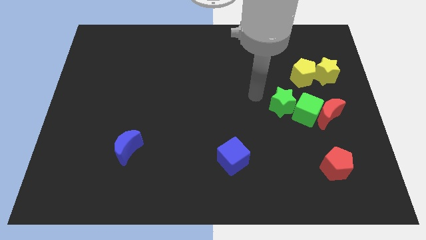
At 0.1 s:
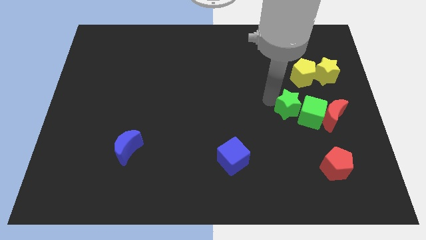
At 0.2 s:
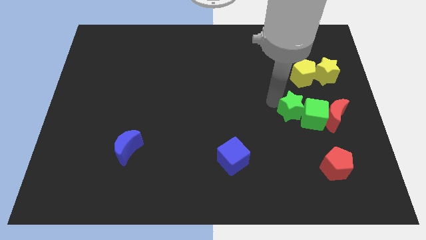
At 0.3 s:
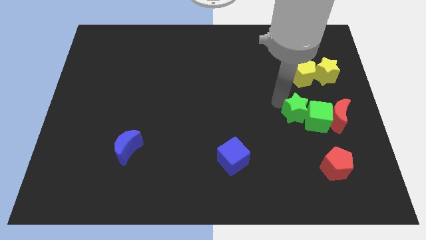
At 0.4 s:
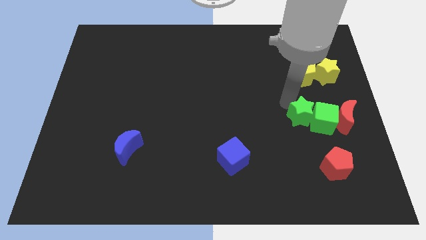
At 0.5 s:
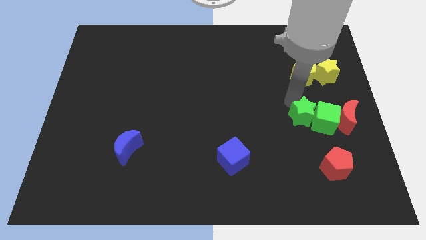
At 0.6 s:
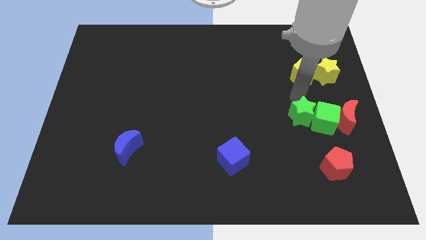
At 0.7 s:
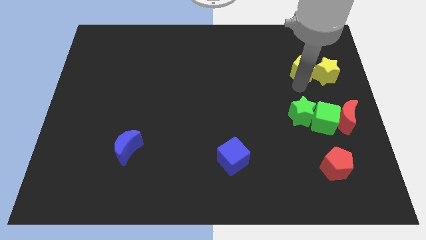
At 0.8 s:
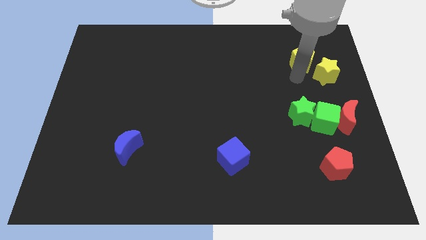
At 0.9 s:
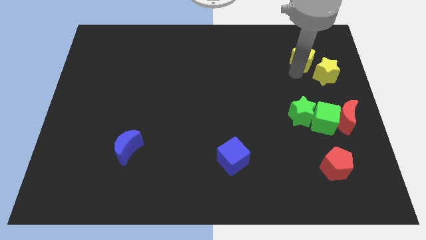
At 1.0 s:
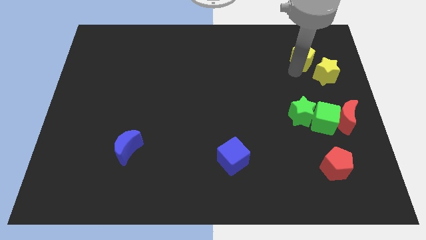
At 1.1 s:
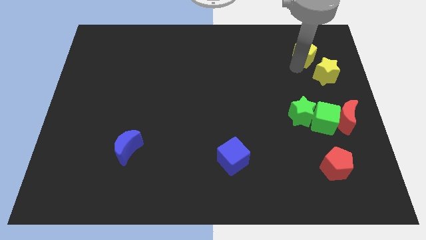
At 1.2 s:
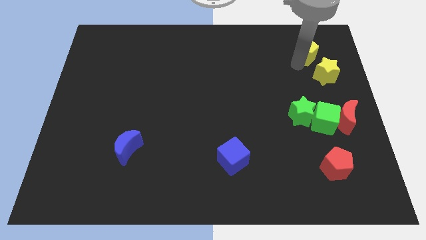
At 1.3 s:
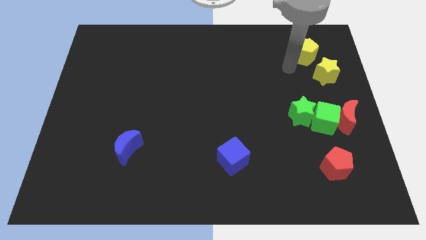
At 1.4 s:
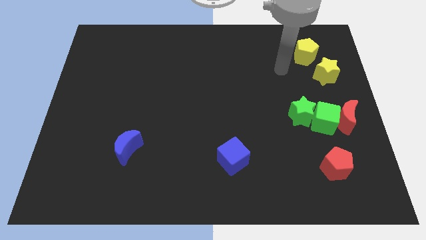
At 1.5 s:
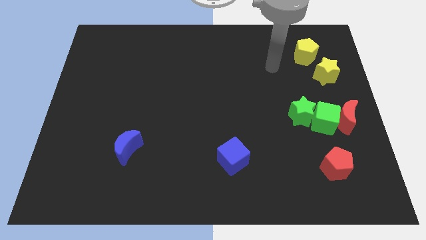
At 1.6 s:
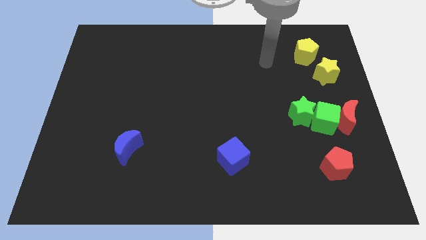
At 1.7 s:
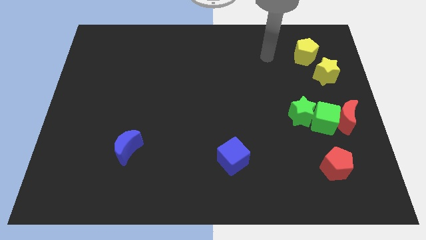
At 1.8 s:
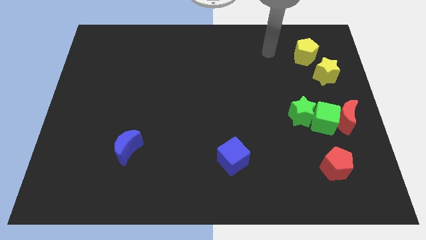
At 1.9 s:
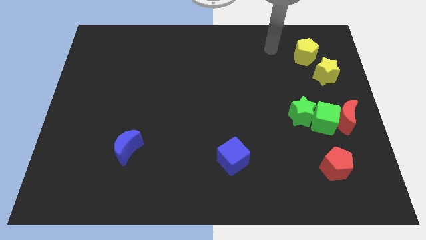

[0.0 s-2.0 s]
slide the yellow pentagon to the top left of yellow star

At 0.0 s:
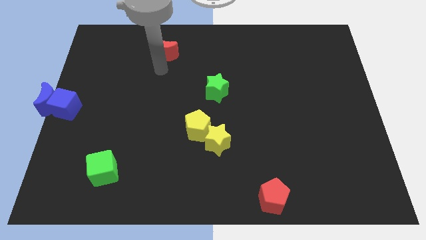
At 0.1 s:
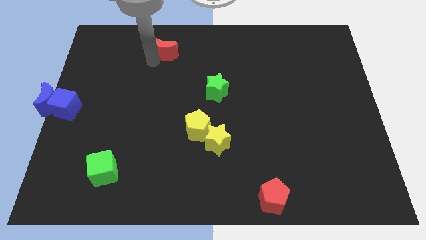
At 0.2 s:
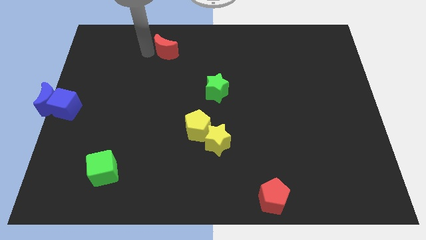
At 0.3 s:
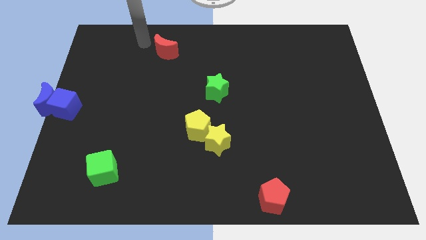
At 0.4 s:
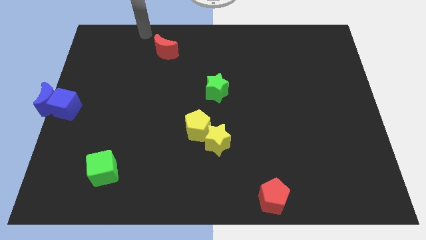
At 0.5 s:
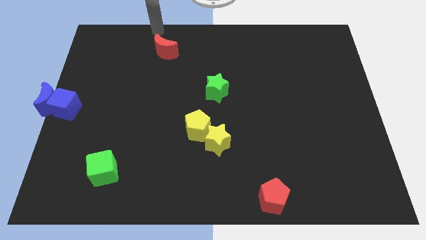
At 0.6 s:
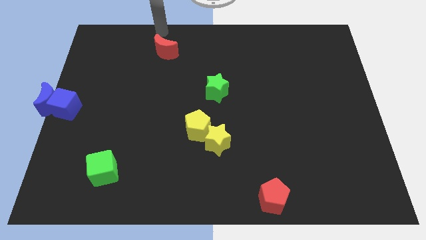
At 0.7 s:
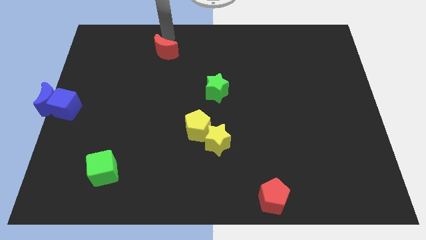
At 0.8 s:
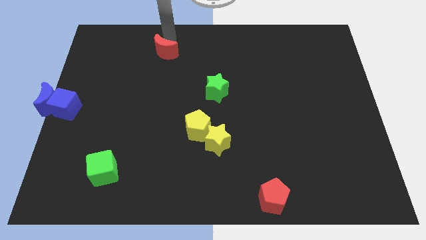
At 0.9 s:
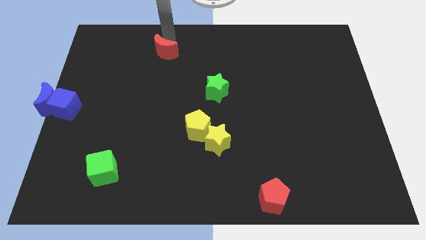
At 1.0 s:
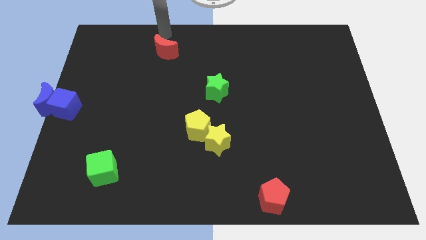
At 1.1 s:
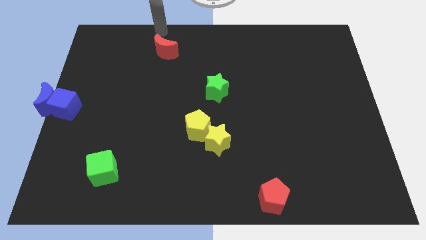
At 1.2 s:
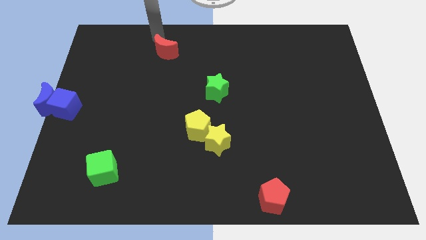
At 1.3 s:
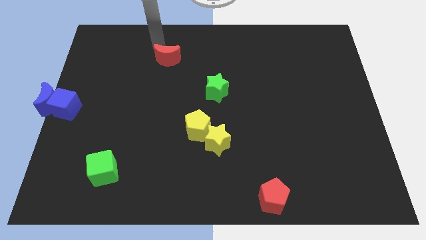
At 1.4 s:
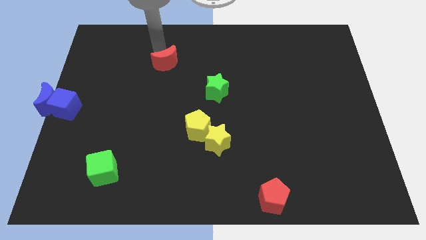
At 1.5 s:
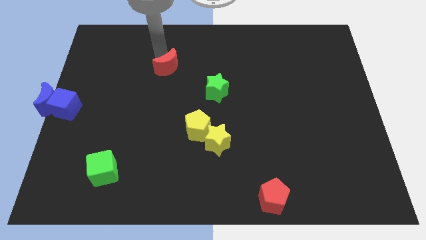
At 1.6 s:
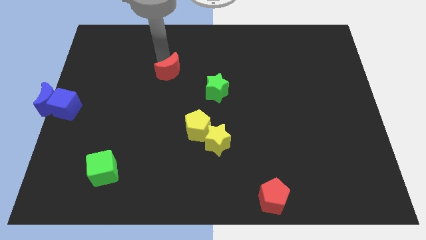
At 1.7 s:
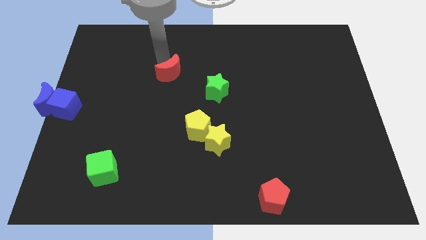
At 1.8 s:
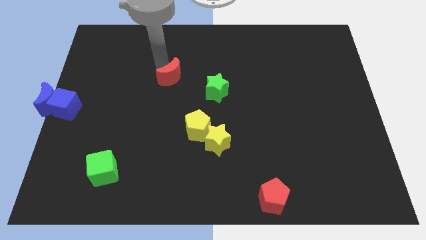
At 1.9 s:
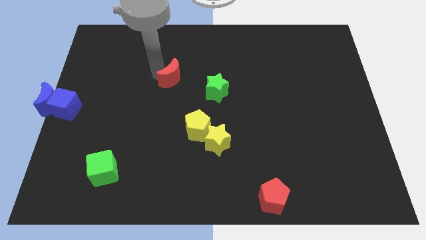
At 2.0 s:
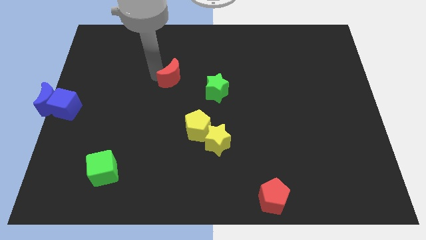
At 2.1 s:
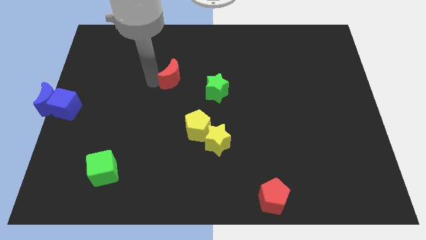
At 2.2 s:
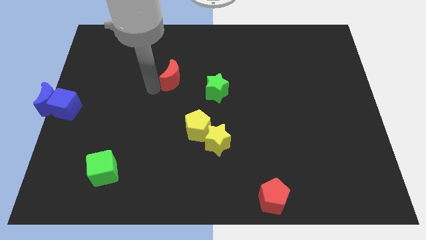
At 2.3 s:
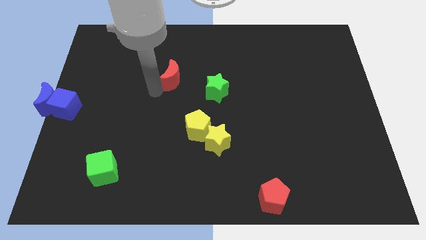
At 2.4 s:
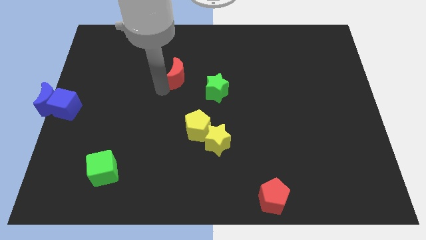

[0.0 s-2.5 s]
push the red crescent to the left of the green star

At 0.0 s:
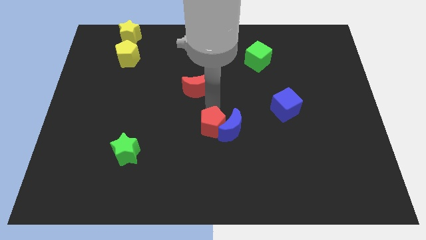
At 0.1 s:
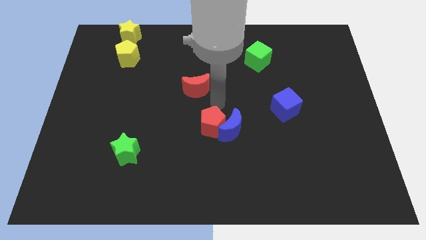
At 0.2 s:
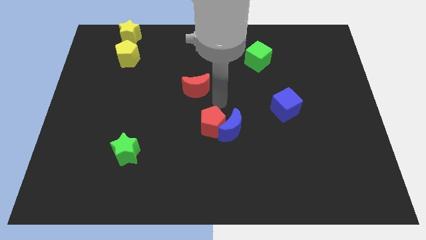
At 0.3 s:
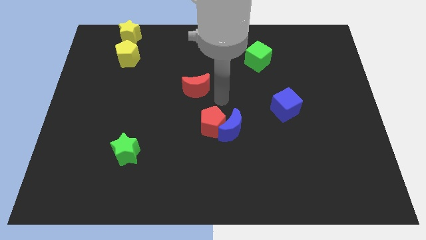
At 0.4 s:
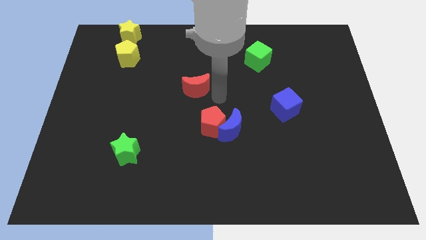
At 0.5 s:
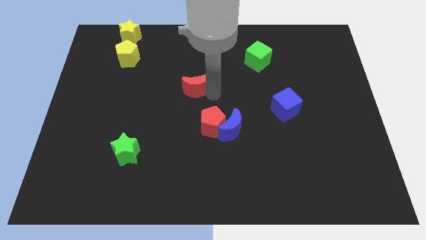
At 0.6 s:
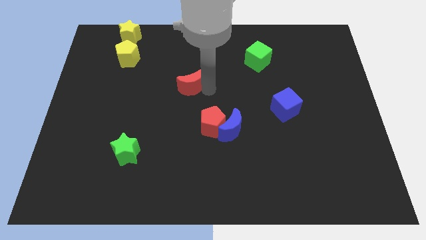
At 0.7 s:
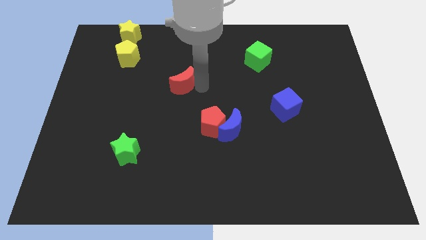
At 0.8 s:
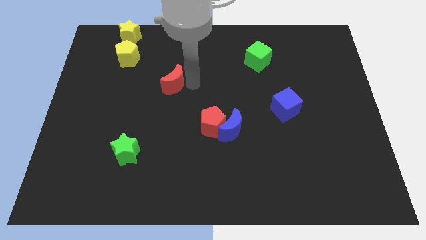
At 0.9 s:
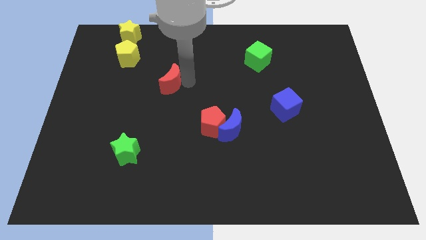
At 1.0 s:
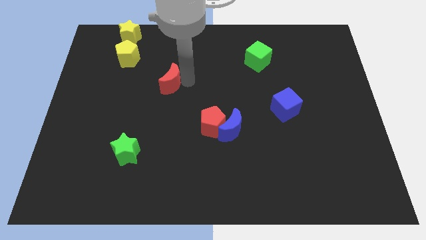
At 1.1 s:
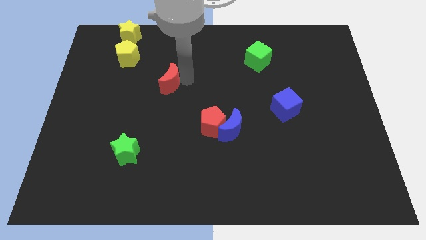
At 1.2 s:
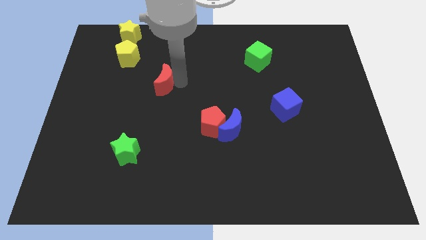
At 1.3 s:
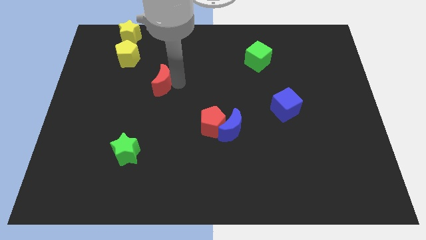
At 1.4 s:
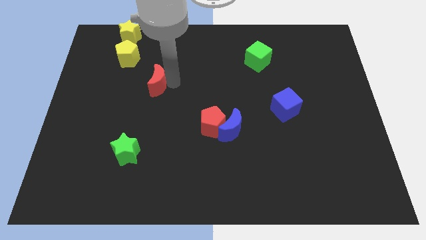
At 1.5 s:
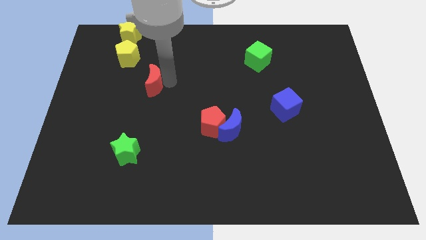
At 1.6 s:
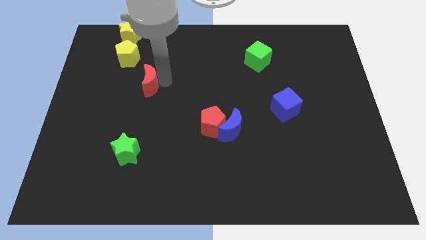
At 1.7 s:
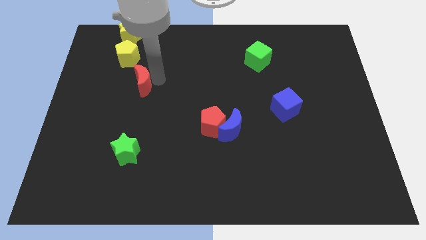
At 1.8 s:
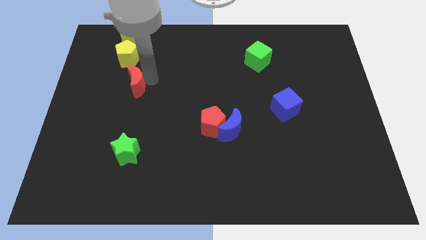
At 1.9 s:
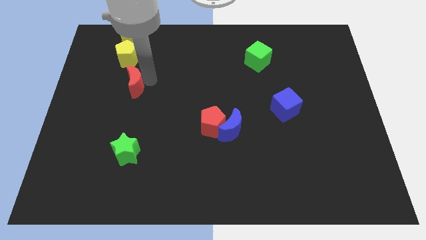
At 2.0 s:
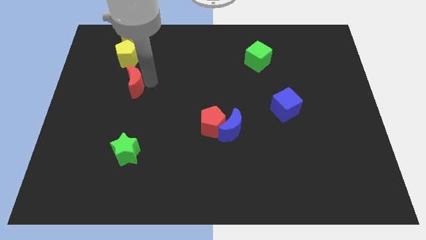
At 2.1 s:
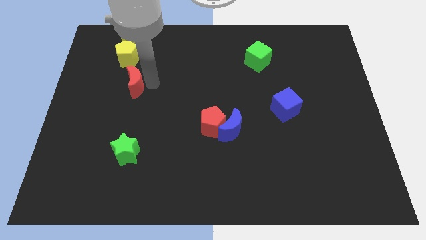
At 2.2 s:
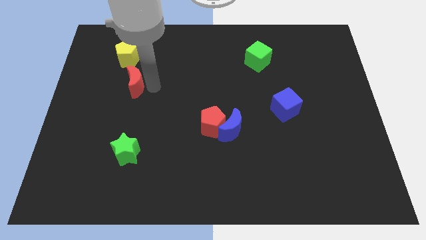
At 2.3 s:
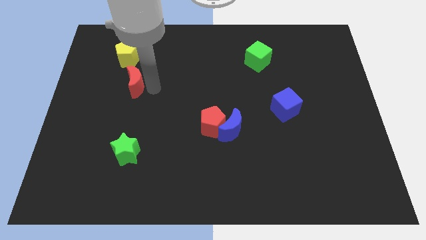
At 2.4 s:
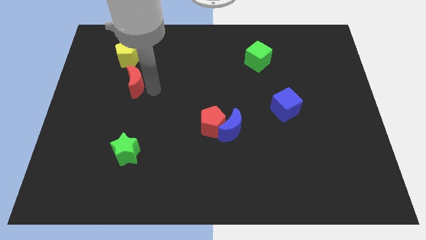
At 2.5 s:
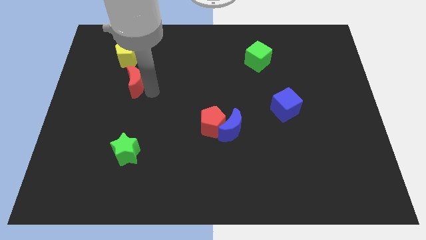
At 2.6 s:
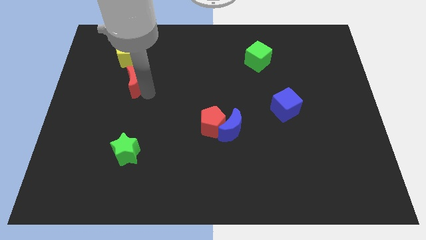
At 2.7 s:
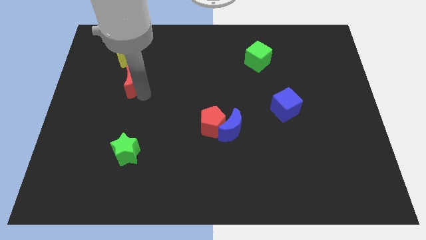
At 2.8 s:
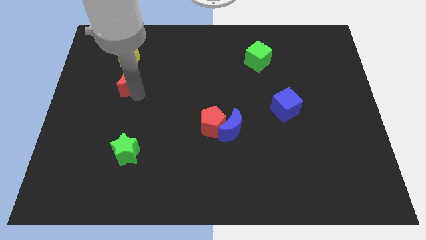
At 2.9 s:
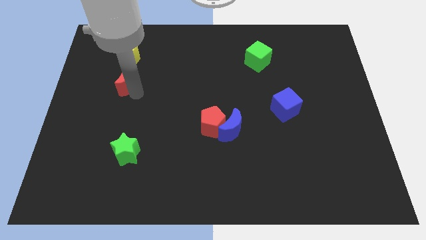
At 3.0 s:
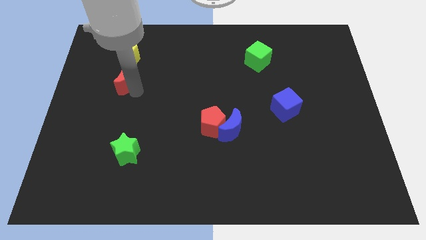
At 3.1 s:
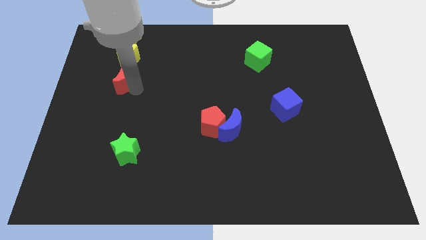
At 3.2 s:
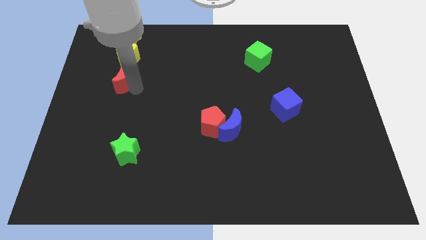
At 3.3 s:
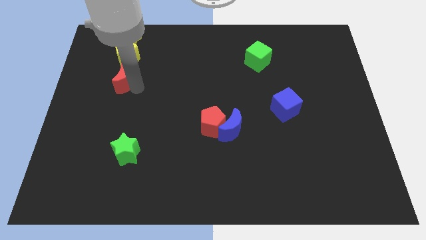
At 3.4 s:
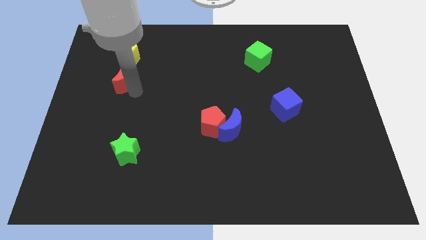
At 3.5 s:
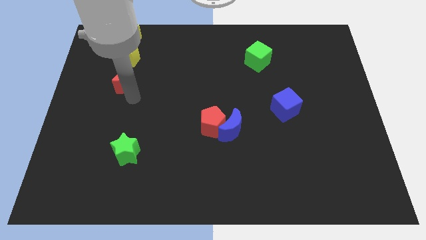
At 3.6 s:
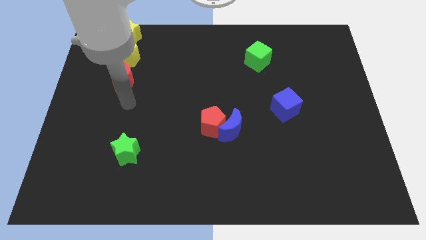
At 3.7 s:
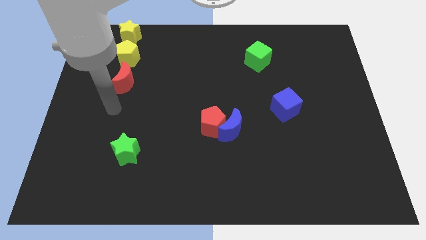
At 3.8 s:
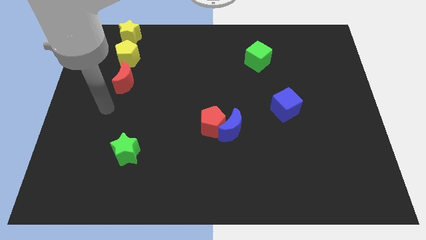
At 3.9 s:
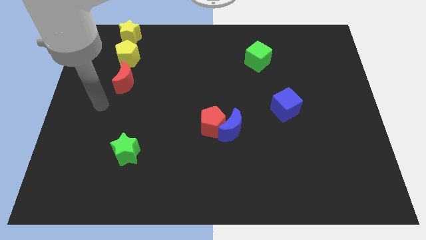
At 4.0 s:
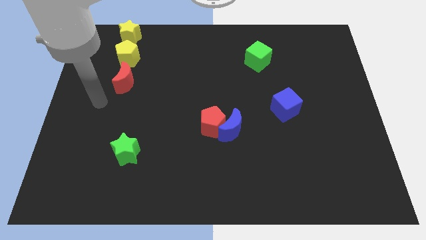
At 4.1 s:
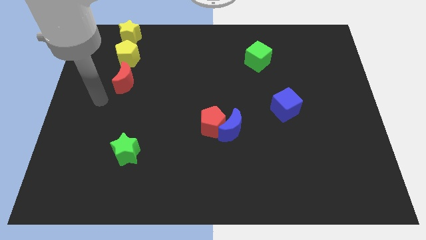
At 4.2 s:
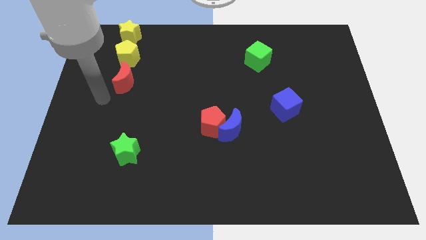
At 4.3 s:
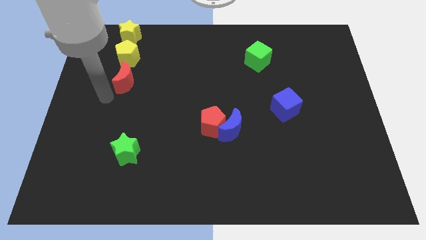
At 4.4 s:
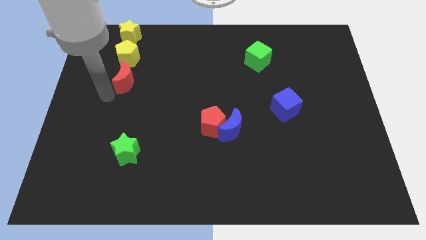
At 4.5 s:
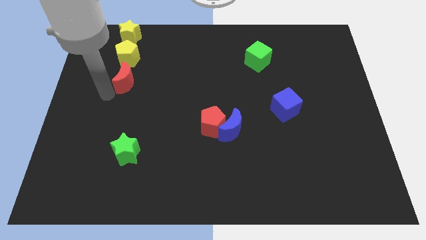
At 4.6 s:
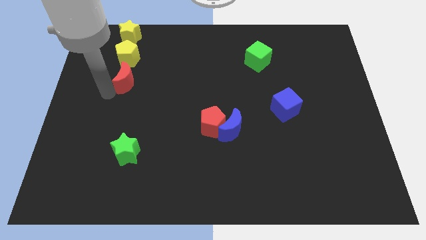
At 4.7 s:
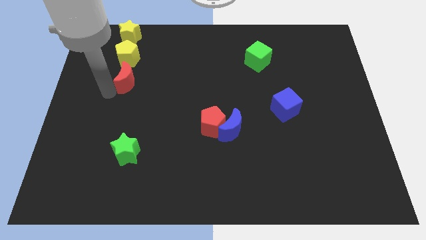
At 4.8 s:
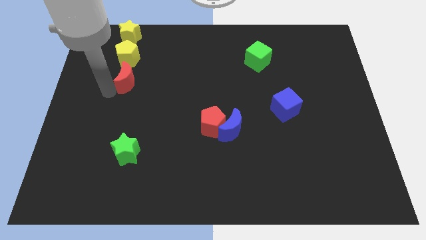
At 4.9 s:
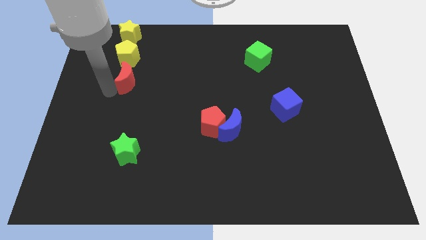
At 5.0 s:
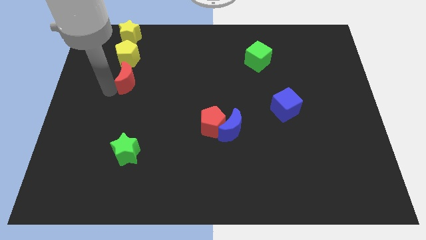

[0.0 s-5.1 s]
put red moon below the yellow pentagon
